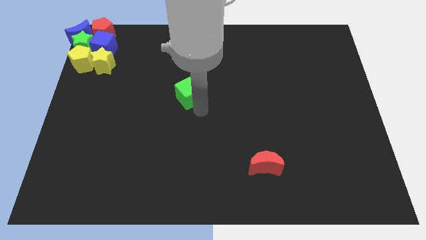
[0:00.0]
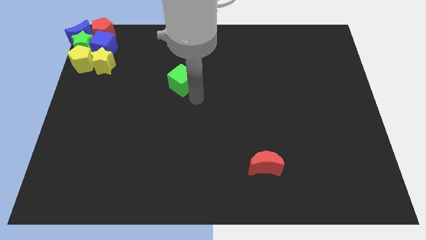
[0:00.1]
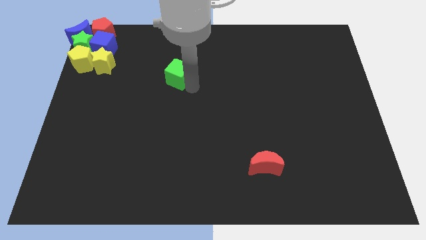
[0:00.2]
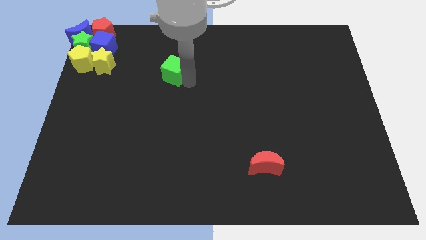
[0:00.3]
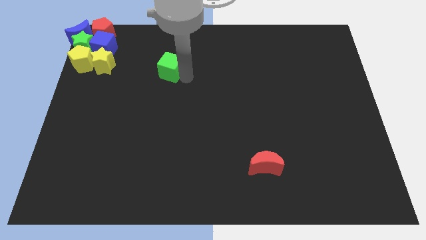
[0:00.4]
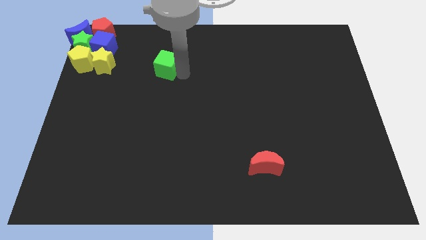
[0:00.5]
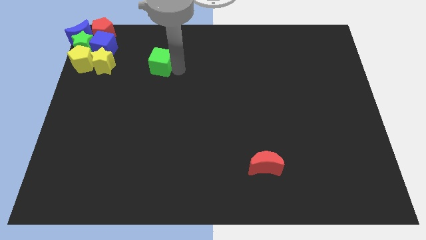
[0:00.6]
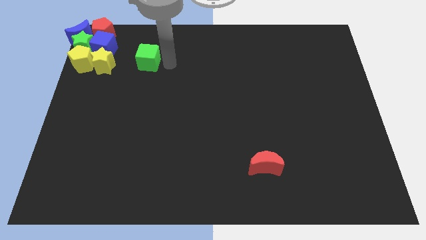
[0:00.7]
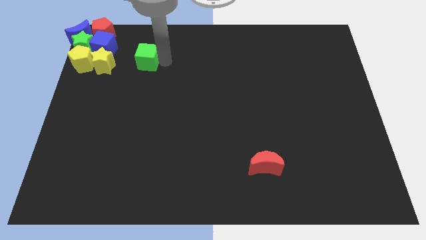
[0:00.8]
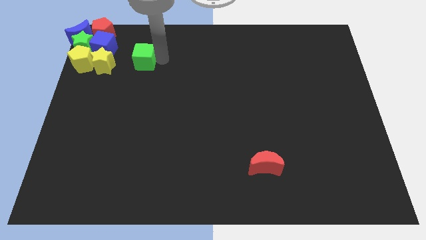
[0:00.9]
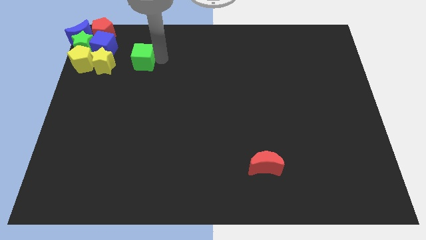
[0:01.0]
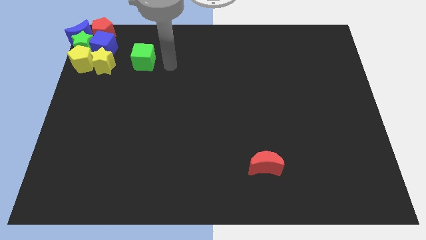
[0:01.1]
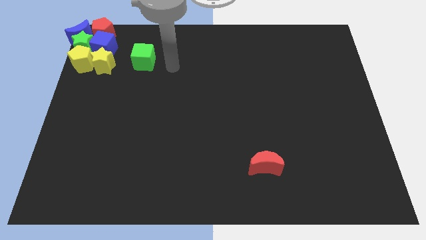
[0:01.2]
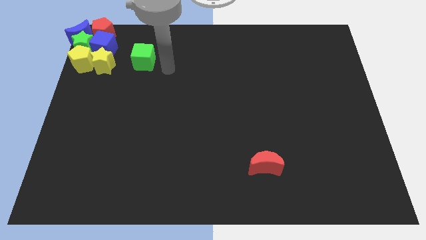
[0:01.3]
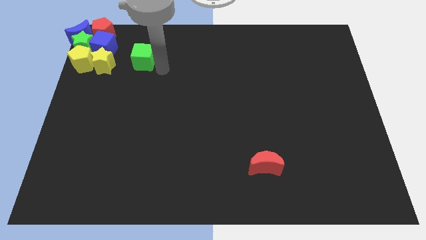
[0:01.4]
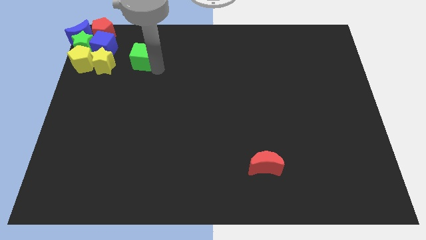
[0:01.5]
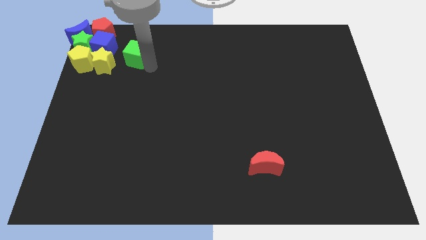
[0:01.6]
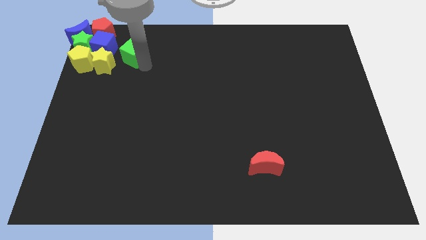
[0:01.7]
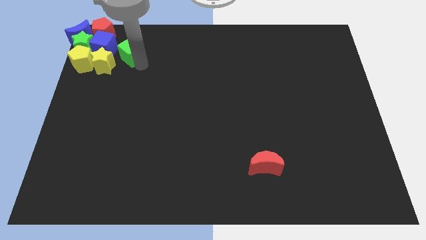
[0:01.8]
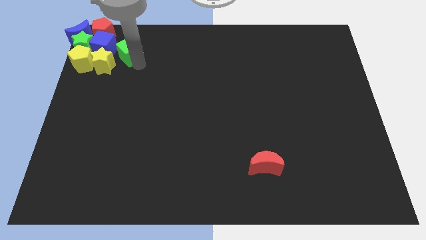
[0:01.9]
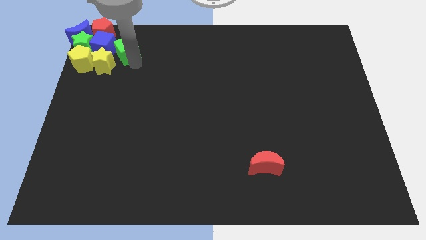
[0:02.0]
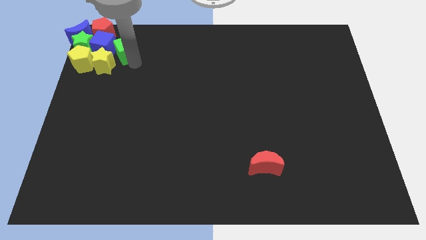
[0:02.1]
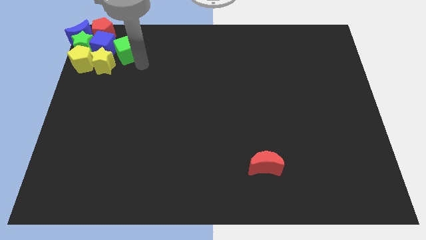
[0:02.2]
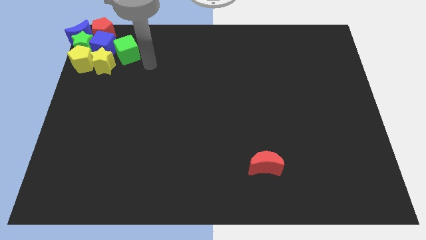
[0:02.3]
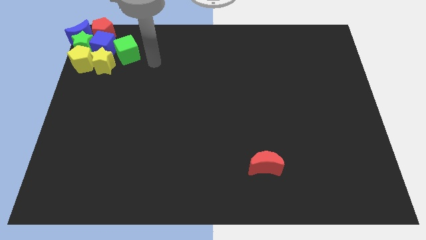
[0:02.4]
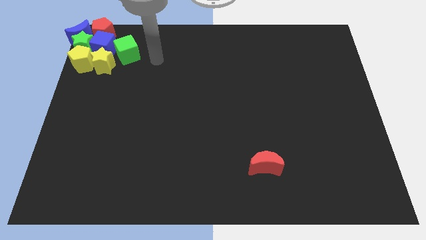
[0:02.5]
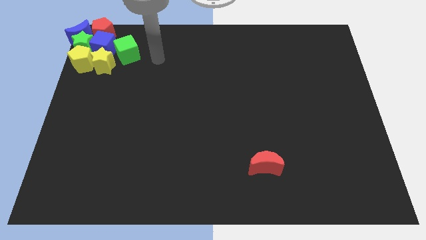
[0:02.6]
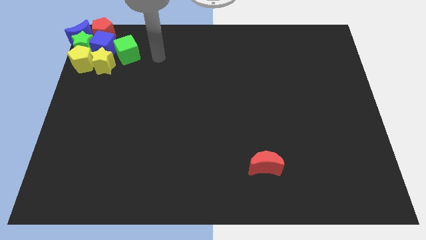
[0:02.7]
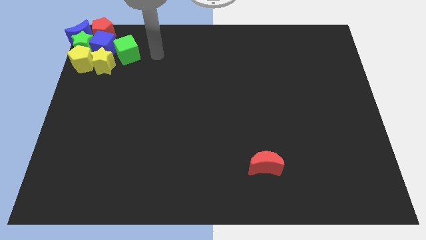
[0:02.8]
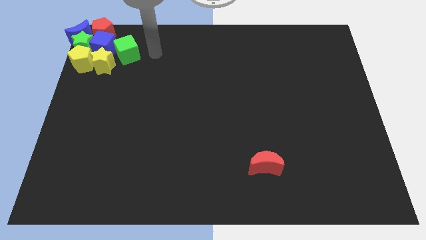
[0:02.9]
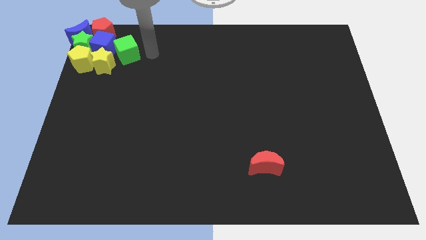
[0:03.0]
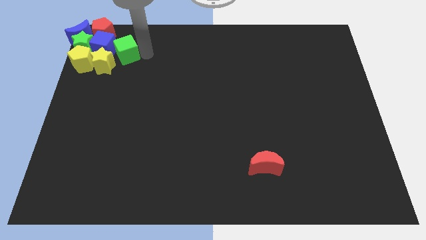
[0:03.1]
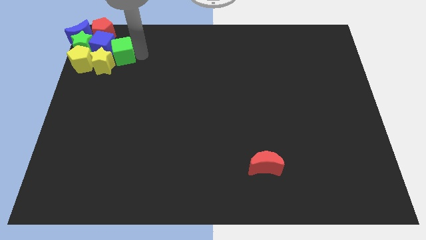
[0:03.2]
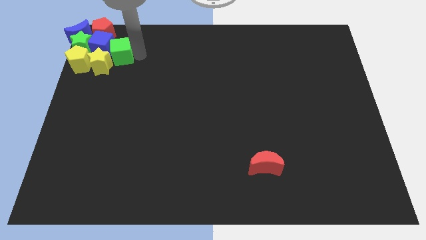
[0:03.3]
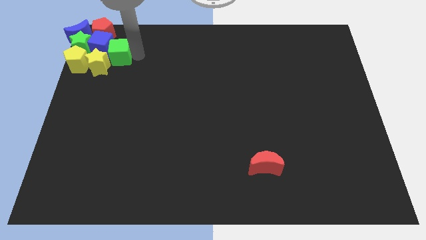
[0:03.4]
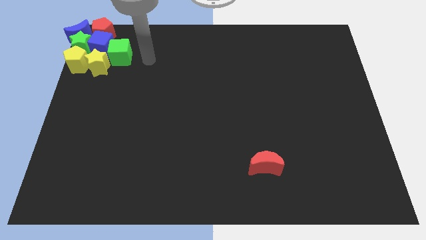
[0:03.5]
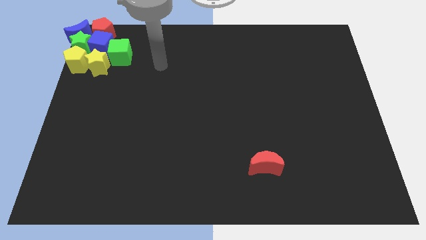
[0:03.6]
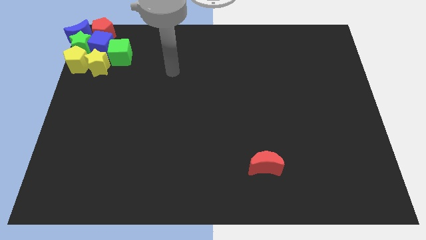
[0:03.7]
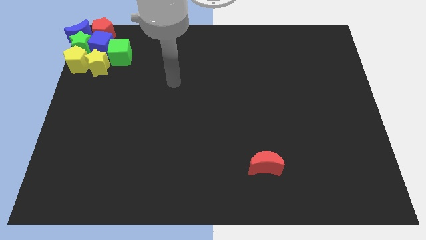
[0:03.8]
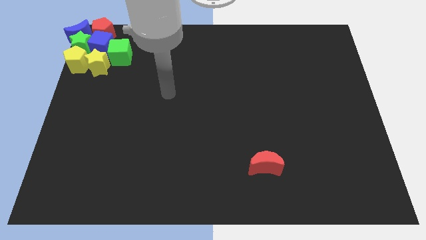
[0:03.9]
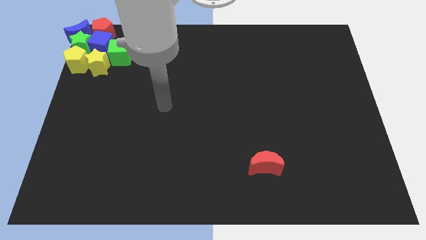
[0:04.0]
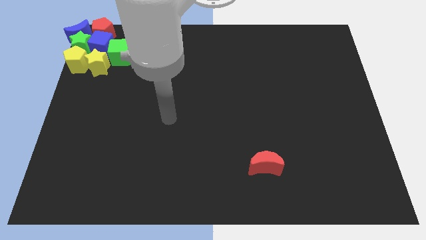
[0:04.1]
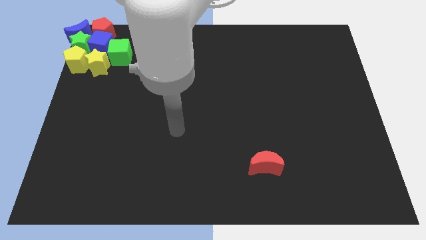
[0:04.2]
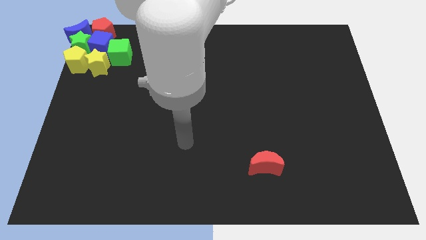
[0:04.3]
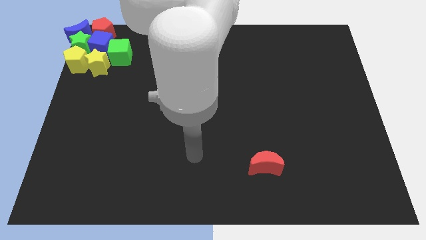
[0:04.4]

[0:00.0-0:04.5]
push the green cube into the group of blocks

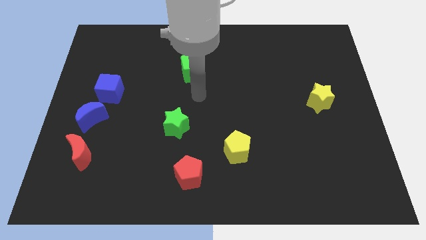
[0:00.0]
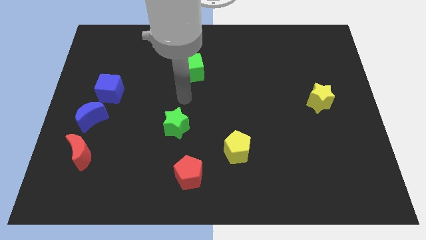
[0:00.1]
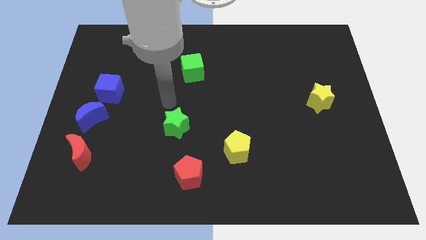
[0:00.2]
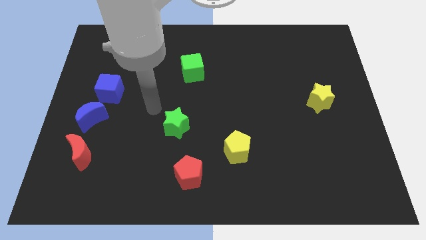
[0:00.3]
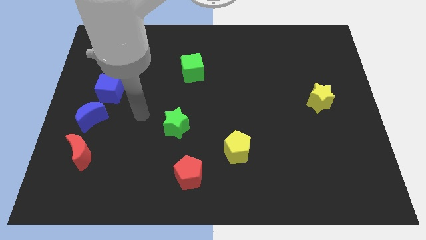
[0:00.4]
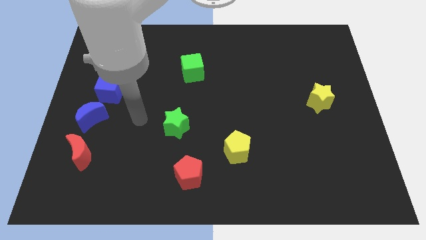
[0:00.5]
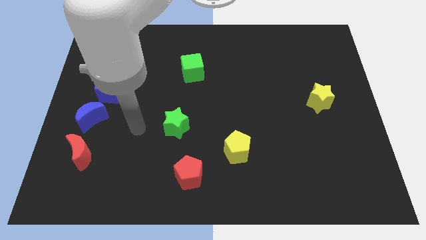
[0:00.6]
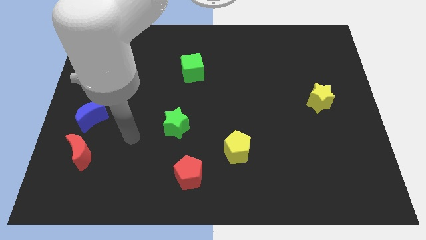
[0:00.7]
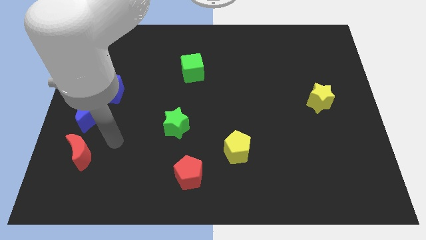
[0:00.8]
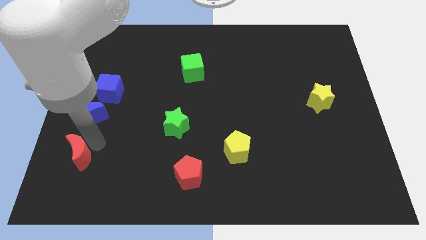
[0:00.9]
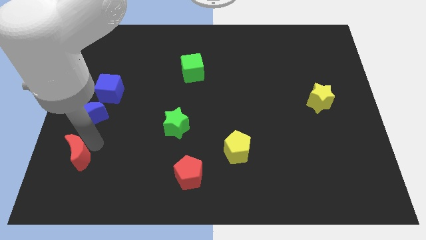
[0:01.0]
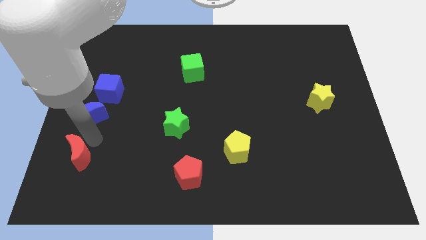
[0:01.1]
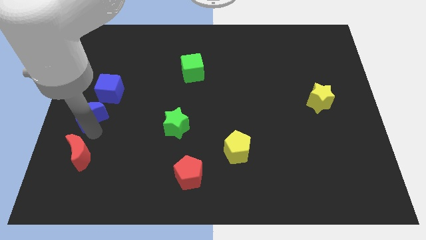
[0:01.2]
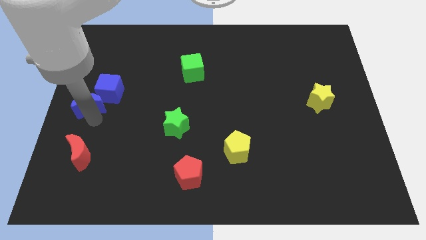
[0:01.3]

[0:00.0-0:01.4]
place your arm to the bottom of blue moon

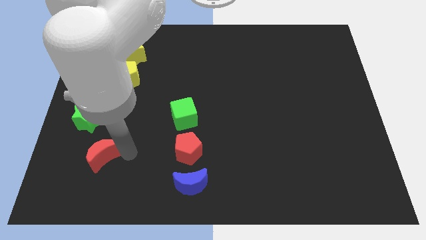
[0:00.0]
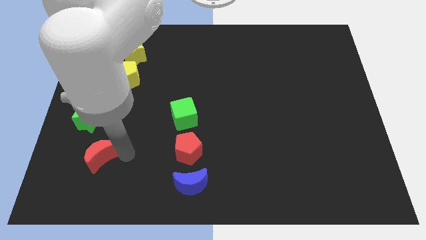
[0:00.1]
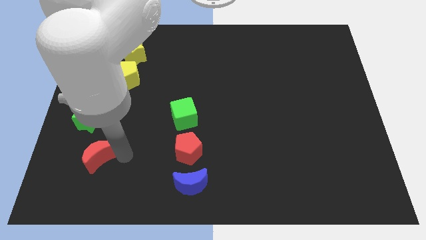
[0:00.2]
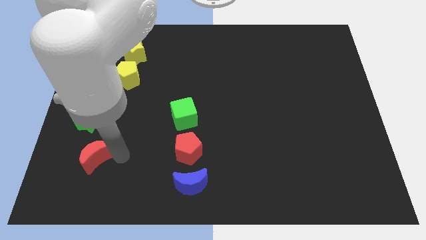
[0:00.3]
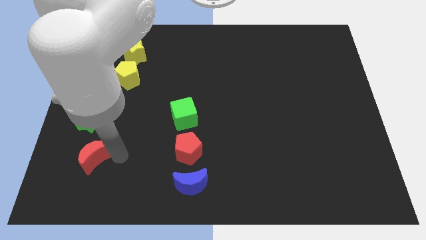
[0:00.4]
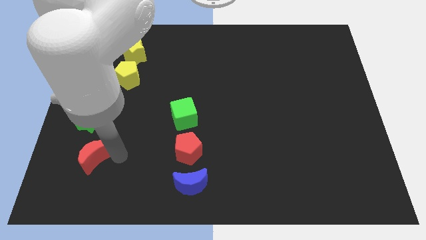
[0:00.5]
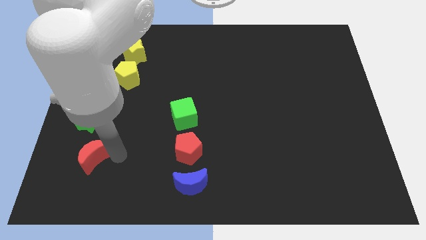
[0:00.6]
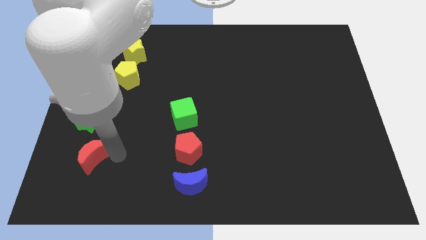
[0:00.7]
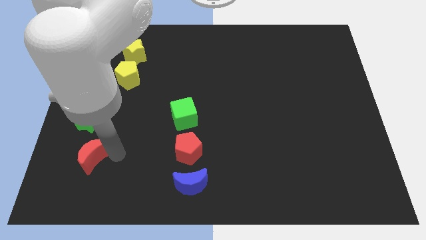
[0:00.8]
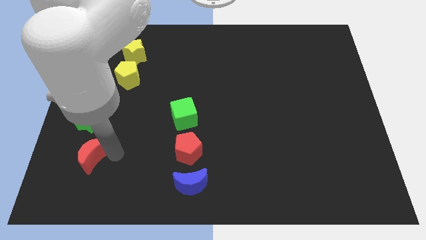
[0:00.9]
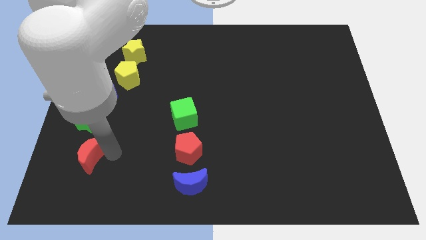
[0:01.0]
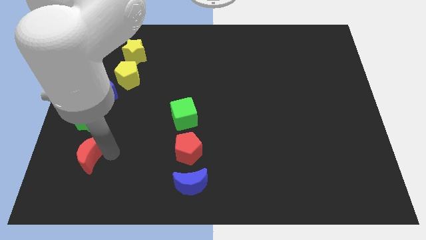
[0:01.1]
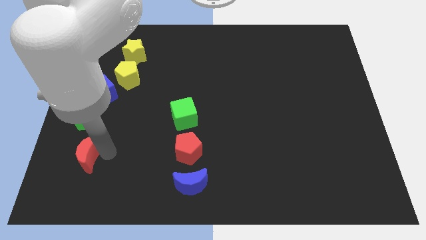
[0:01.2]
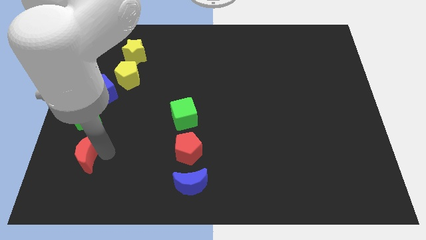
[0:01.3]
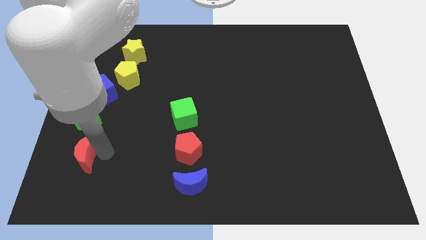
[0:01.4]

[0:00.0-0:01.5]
place the red moon below the green star

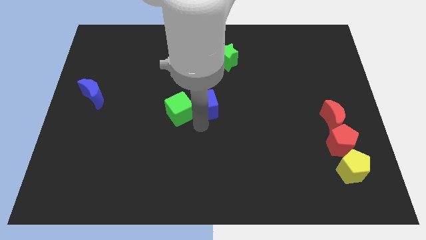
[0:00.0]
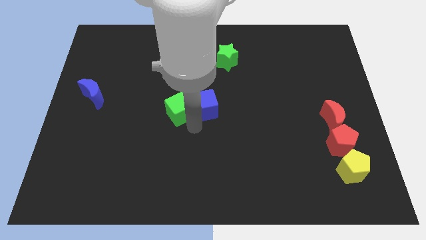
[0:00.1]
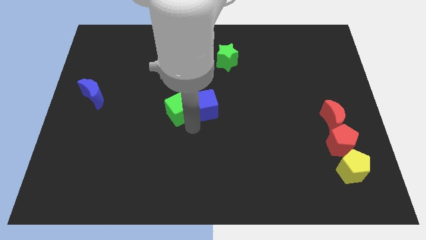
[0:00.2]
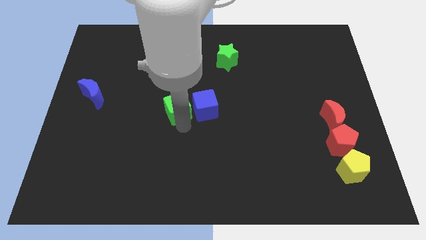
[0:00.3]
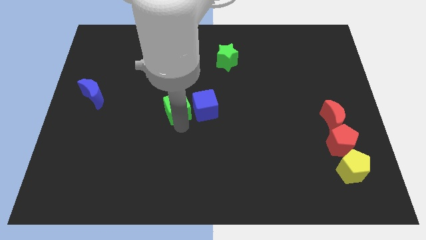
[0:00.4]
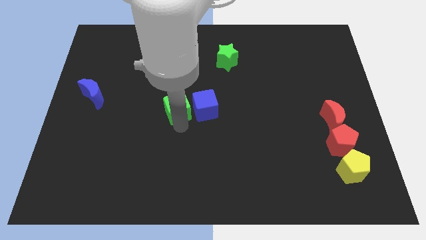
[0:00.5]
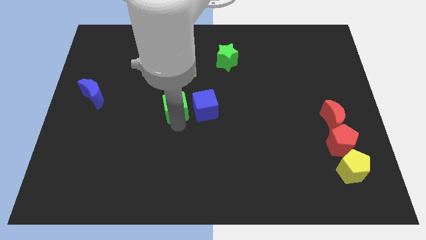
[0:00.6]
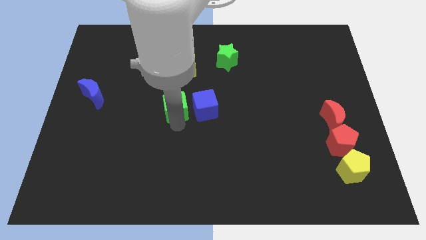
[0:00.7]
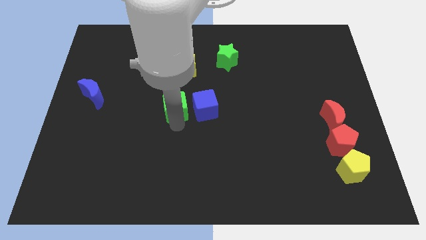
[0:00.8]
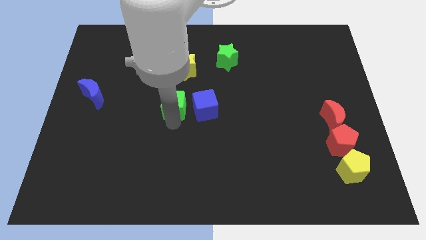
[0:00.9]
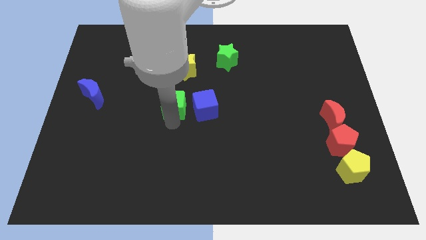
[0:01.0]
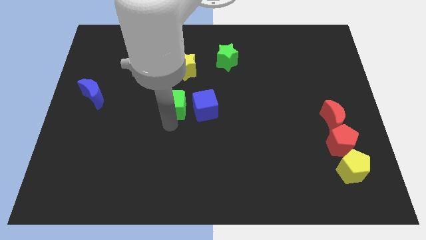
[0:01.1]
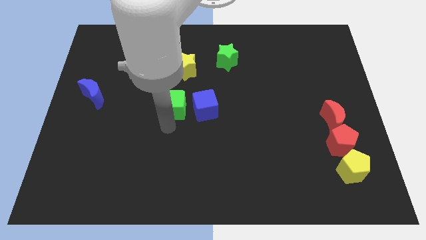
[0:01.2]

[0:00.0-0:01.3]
move the green cube slightly away from the blue cube

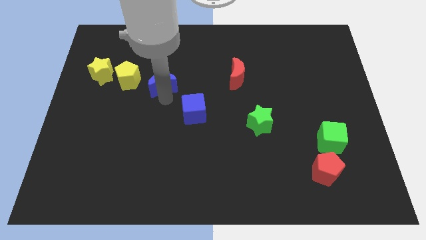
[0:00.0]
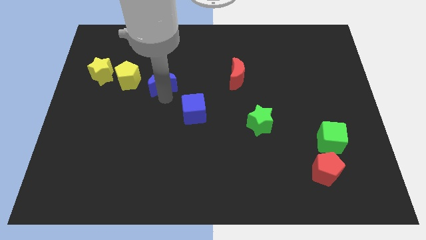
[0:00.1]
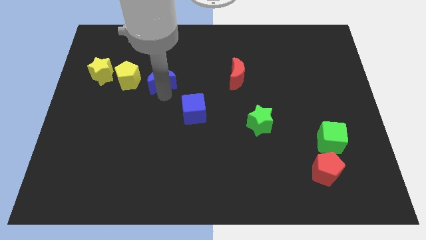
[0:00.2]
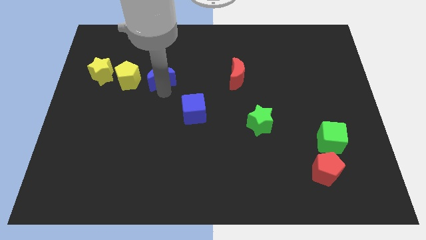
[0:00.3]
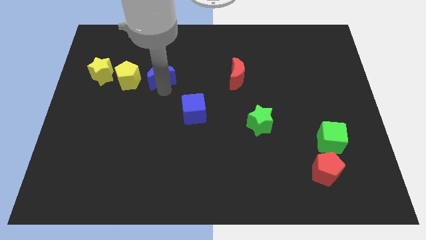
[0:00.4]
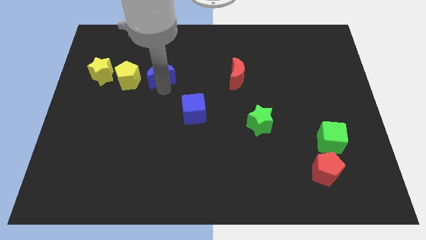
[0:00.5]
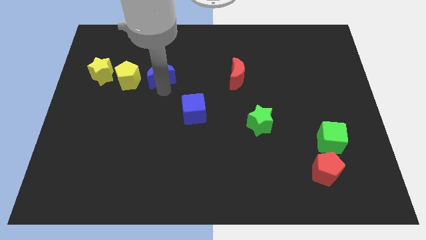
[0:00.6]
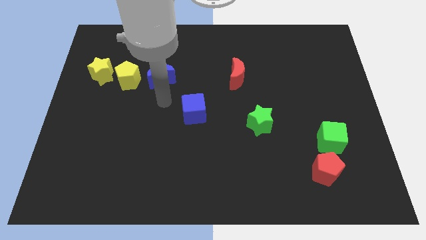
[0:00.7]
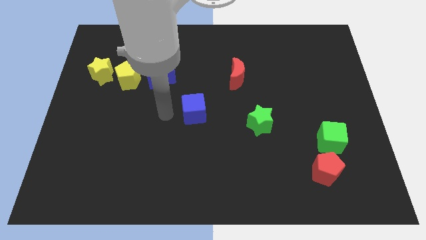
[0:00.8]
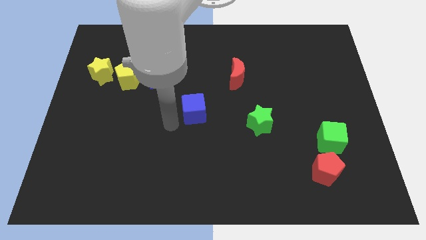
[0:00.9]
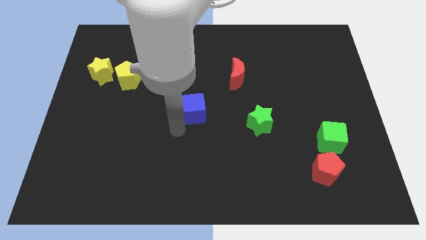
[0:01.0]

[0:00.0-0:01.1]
move the blue moon right to the yellow pentagon
